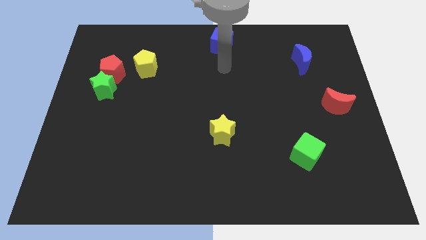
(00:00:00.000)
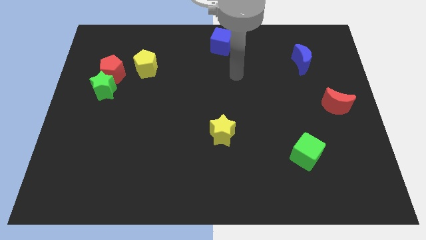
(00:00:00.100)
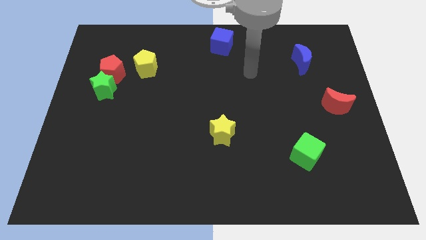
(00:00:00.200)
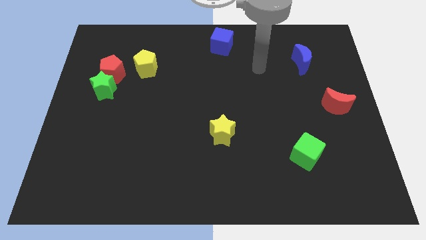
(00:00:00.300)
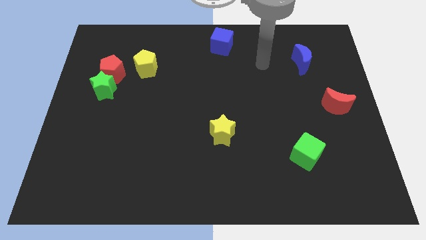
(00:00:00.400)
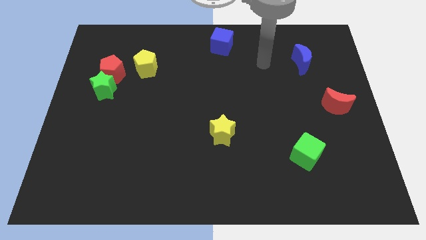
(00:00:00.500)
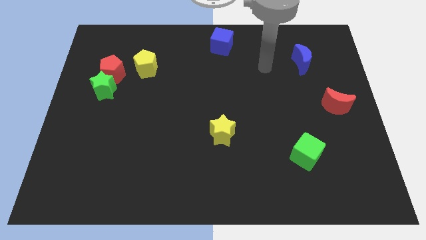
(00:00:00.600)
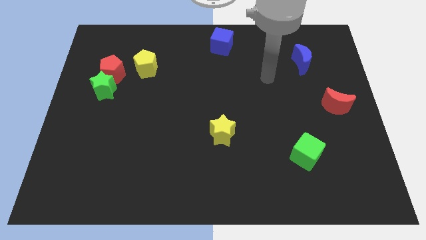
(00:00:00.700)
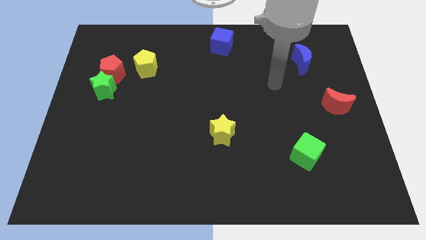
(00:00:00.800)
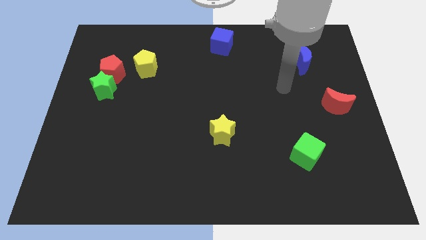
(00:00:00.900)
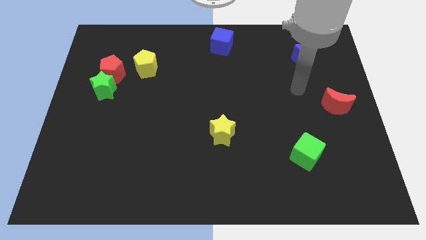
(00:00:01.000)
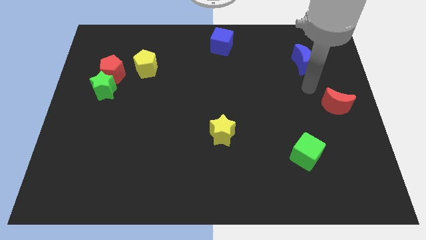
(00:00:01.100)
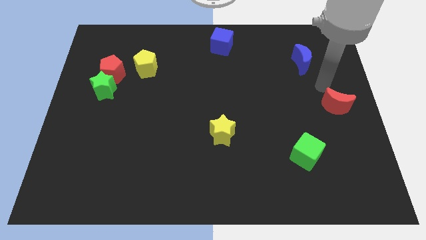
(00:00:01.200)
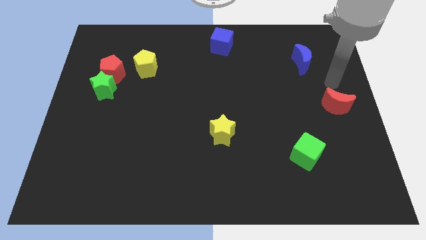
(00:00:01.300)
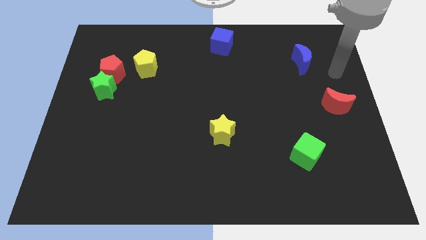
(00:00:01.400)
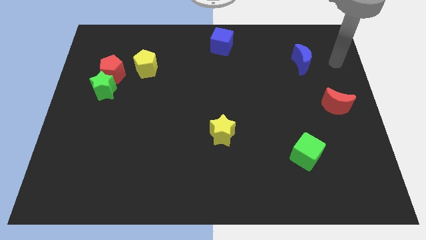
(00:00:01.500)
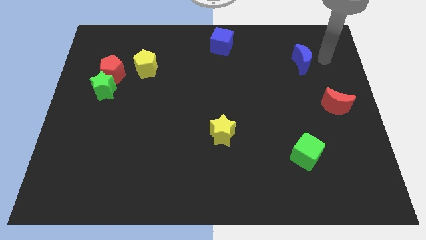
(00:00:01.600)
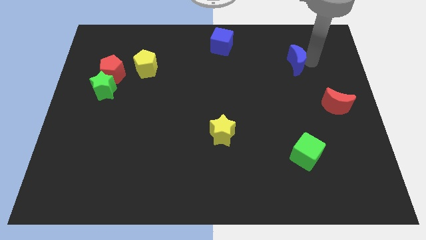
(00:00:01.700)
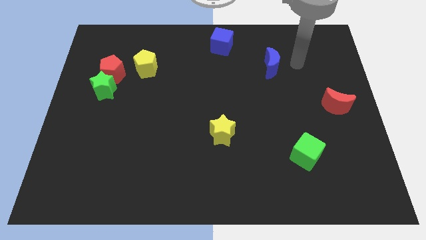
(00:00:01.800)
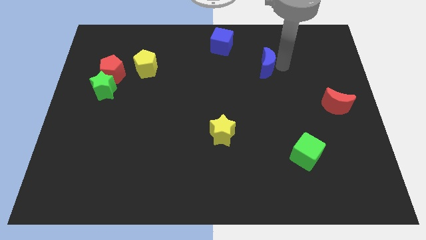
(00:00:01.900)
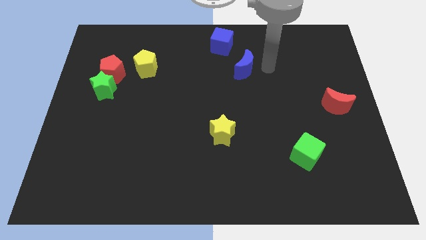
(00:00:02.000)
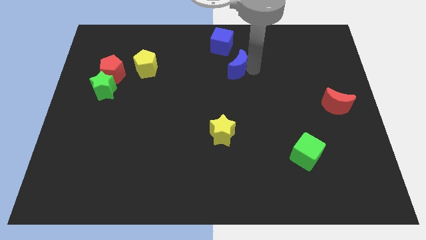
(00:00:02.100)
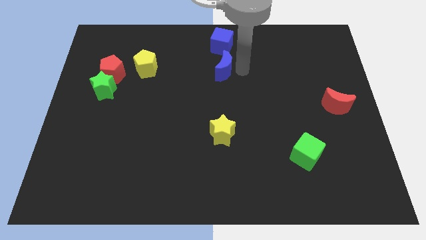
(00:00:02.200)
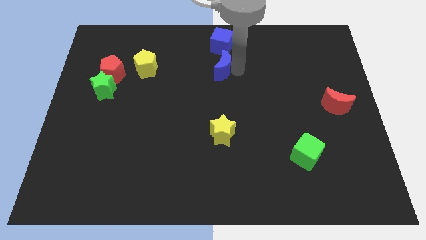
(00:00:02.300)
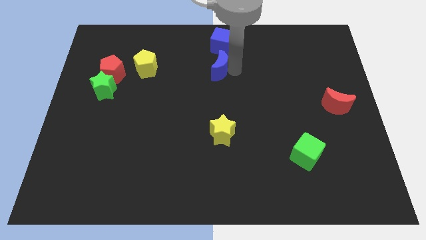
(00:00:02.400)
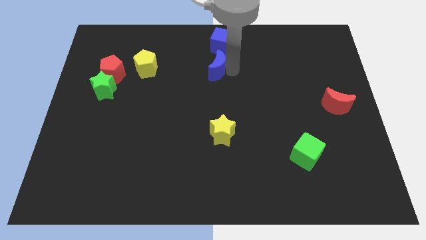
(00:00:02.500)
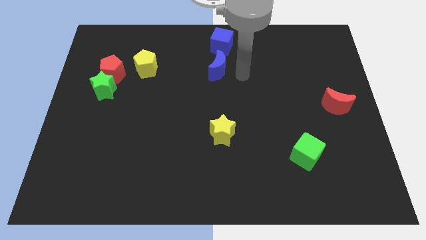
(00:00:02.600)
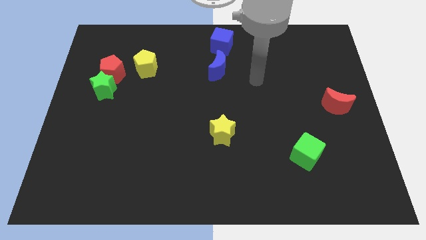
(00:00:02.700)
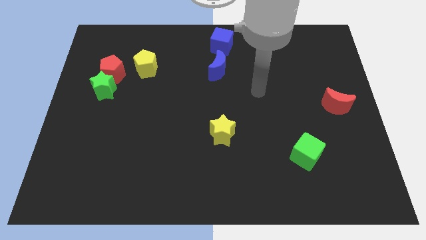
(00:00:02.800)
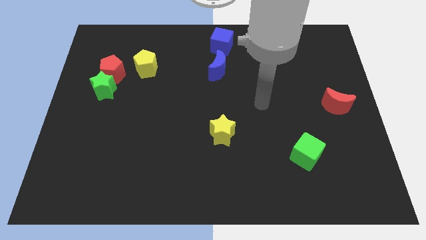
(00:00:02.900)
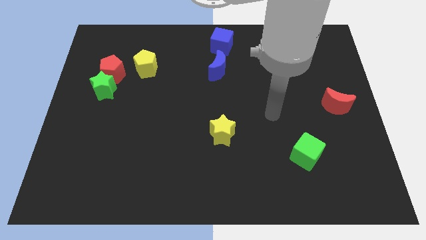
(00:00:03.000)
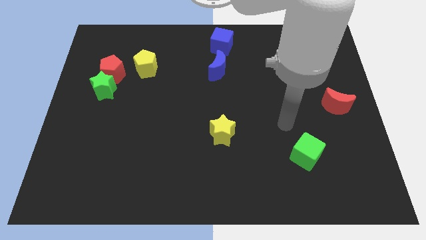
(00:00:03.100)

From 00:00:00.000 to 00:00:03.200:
move the blue crescent to the right of the yellow pentagon

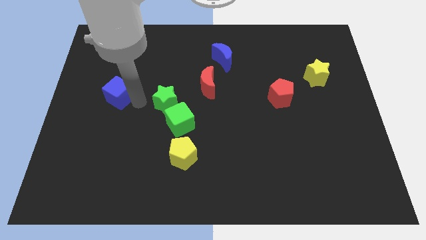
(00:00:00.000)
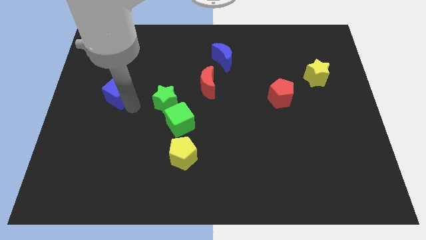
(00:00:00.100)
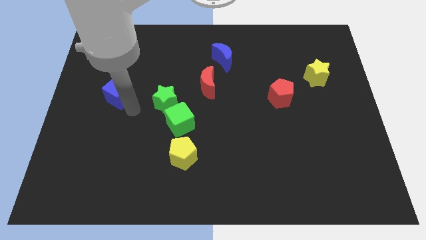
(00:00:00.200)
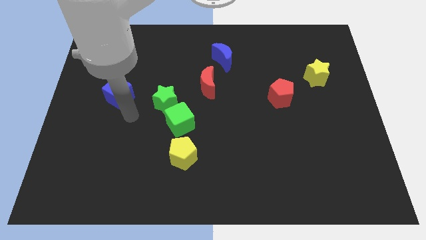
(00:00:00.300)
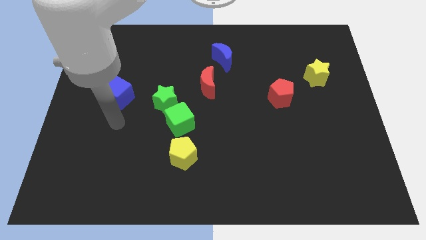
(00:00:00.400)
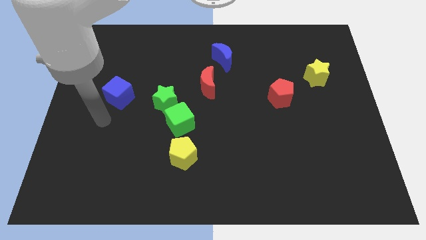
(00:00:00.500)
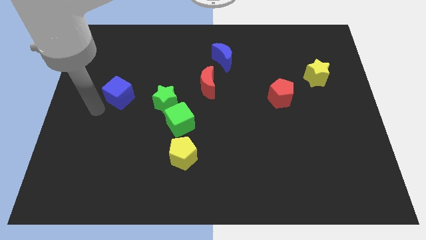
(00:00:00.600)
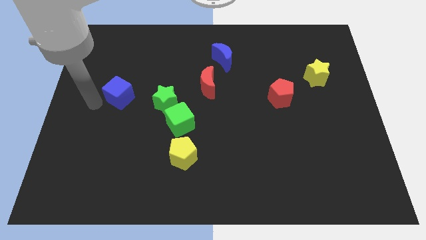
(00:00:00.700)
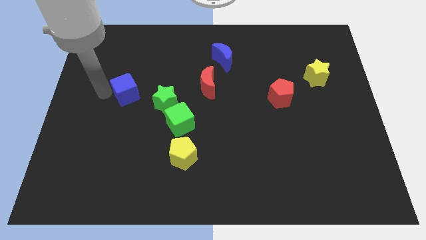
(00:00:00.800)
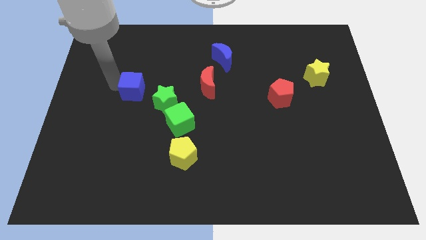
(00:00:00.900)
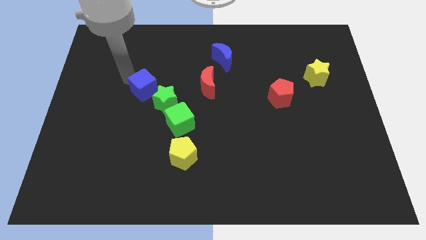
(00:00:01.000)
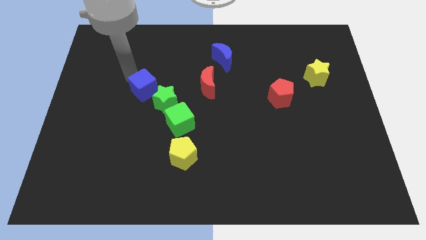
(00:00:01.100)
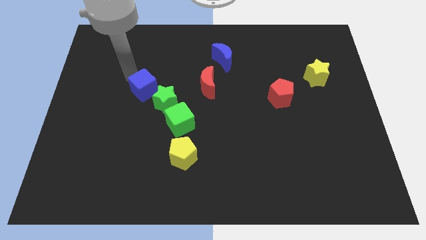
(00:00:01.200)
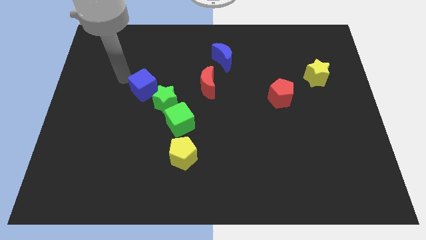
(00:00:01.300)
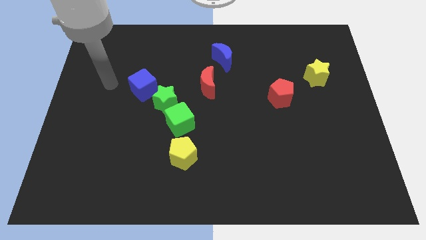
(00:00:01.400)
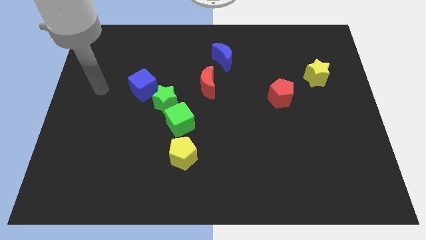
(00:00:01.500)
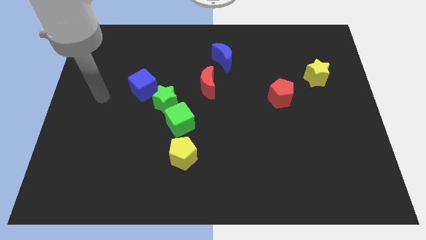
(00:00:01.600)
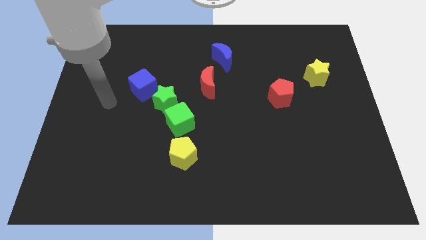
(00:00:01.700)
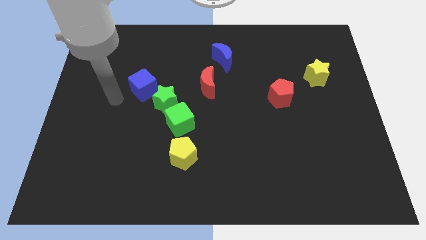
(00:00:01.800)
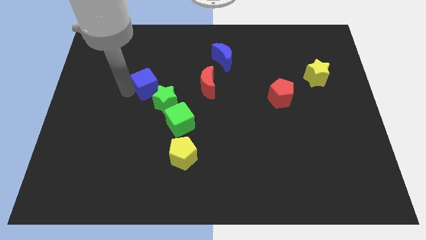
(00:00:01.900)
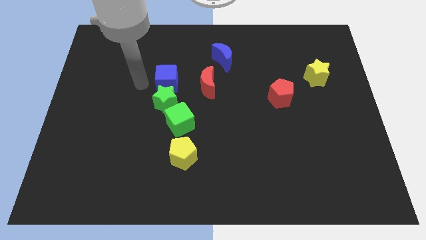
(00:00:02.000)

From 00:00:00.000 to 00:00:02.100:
push blue block into the green star

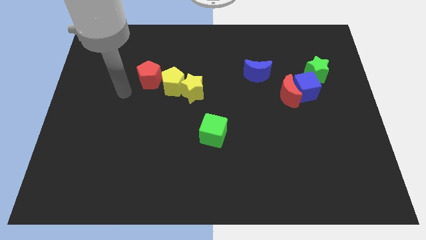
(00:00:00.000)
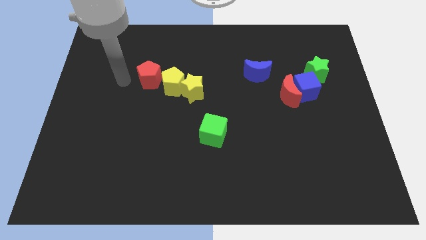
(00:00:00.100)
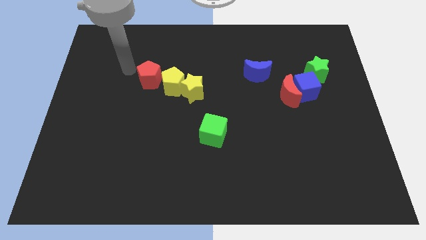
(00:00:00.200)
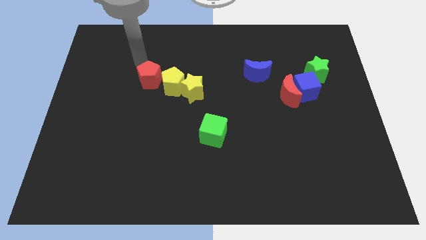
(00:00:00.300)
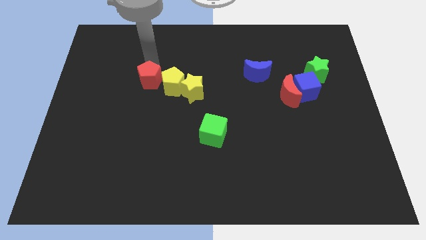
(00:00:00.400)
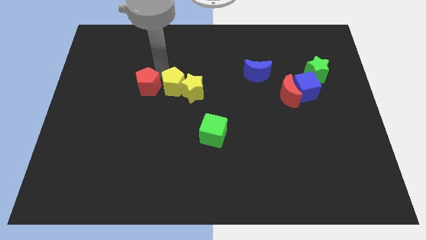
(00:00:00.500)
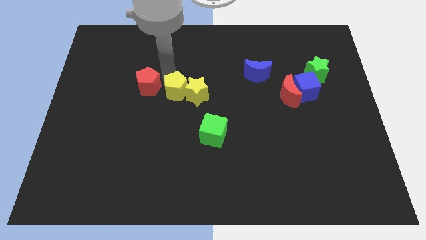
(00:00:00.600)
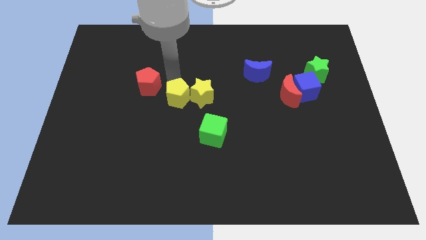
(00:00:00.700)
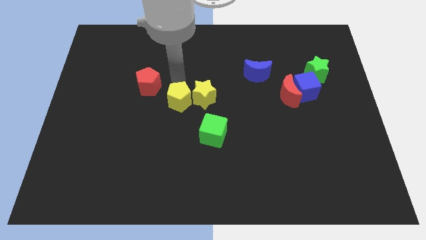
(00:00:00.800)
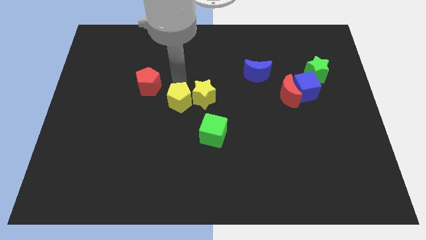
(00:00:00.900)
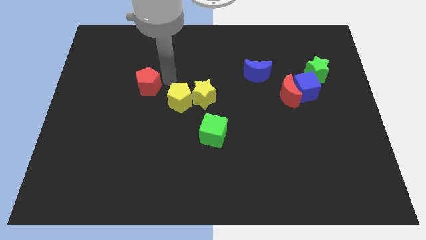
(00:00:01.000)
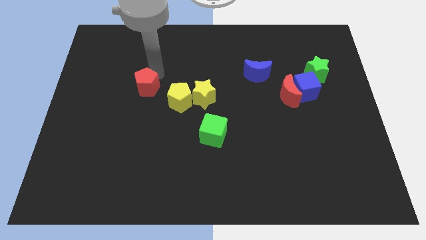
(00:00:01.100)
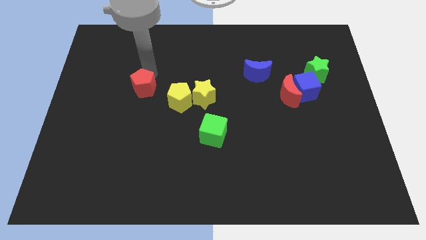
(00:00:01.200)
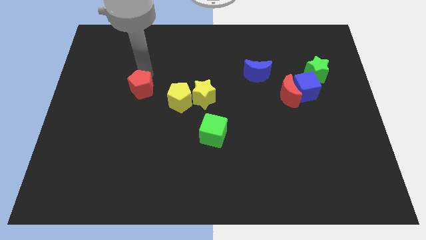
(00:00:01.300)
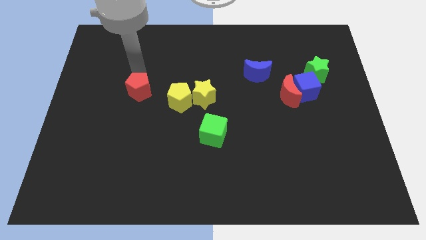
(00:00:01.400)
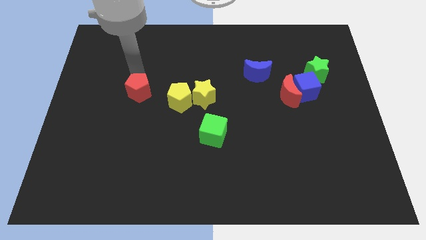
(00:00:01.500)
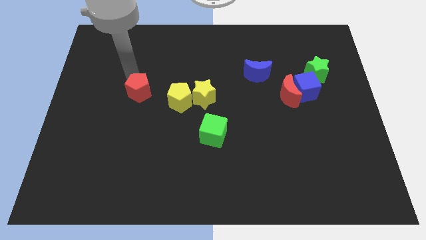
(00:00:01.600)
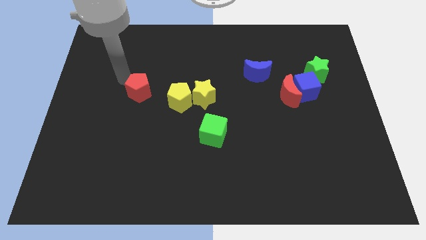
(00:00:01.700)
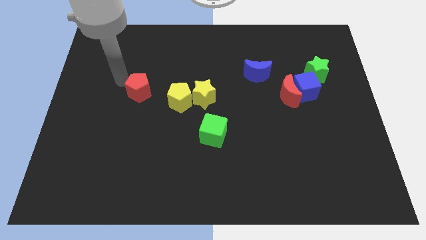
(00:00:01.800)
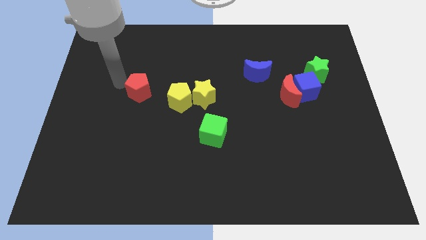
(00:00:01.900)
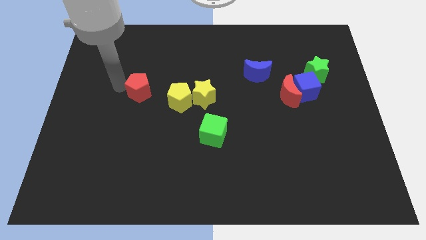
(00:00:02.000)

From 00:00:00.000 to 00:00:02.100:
separate the red pentagon from the yellow pentagon

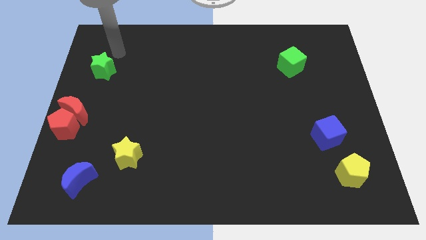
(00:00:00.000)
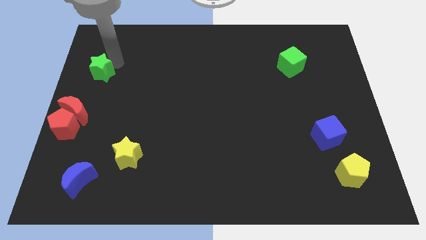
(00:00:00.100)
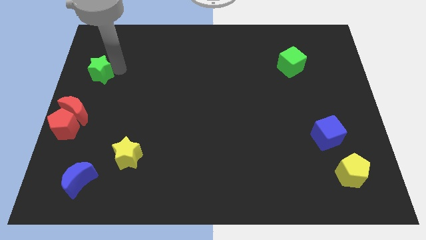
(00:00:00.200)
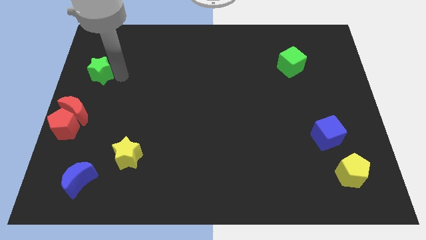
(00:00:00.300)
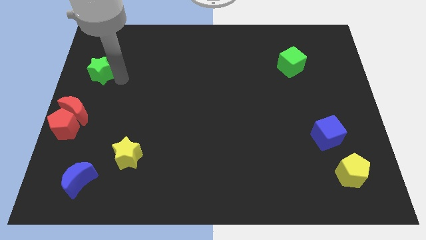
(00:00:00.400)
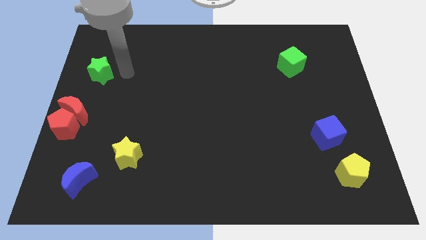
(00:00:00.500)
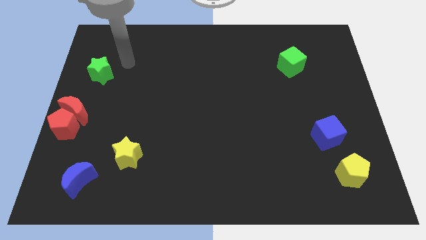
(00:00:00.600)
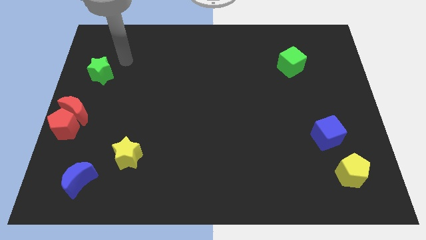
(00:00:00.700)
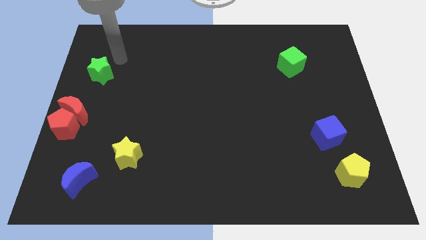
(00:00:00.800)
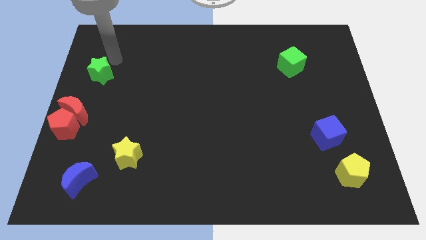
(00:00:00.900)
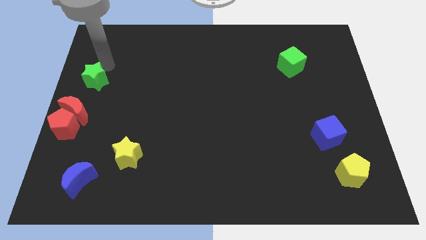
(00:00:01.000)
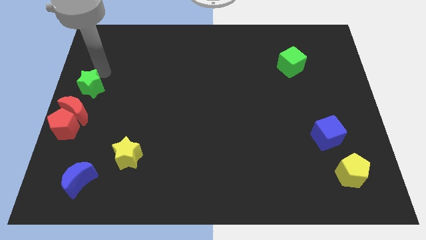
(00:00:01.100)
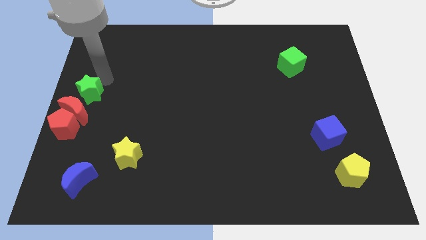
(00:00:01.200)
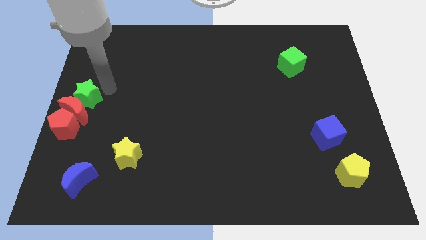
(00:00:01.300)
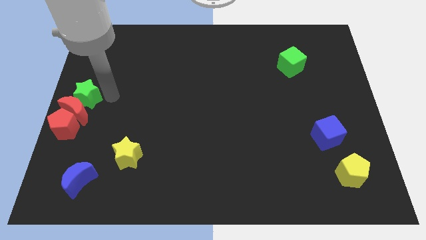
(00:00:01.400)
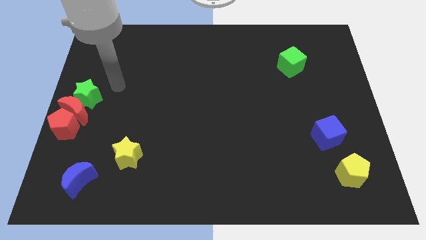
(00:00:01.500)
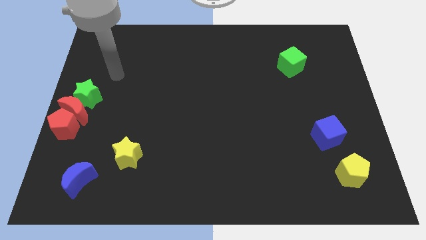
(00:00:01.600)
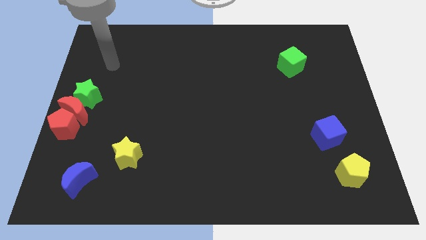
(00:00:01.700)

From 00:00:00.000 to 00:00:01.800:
push the green star into red crescent
